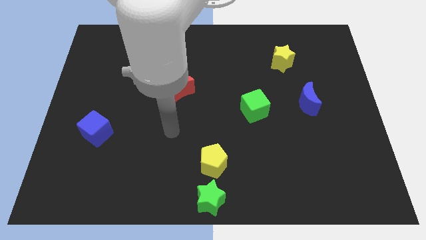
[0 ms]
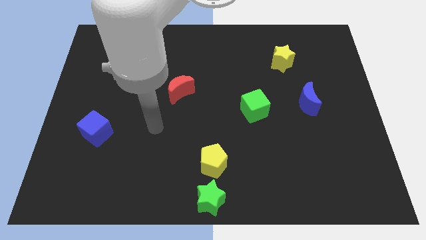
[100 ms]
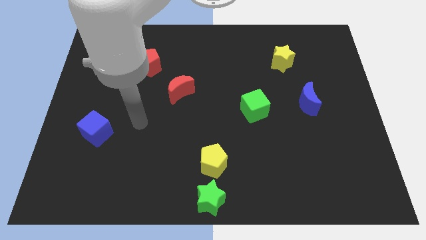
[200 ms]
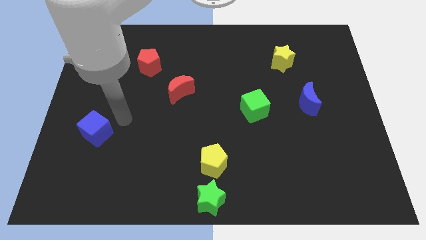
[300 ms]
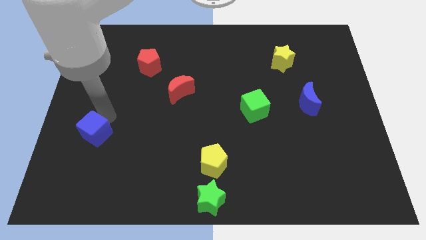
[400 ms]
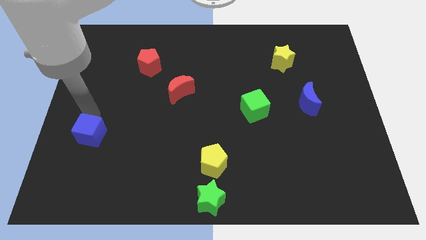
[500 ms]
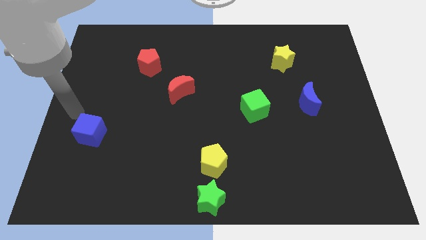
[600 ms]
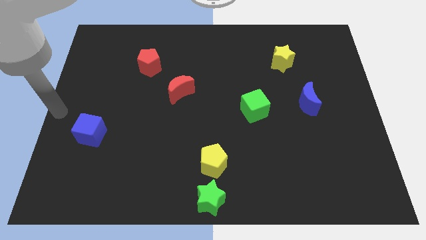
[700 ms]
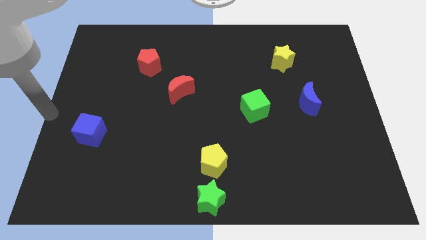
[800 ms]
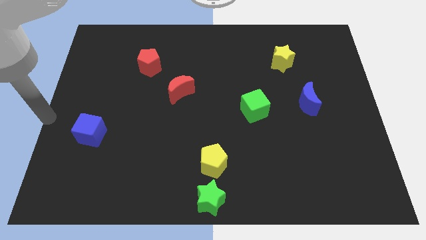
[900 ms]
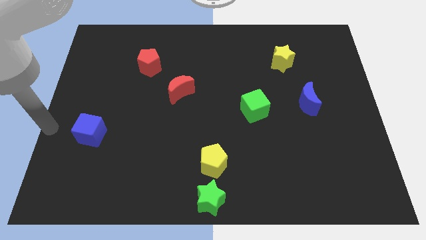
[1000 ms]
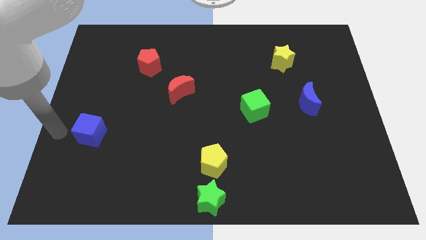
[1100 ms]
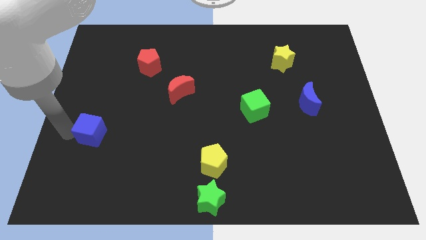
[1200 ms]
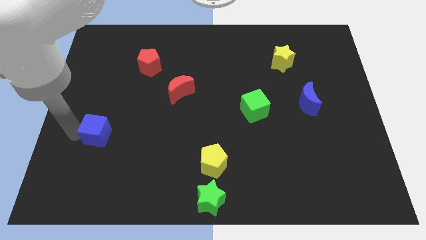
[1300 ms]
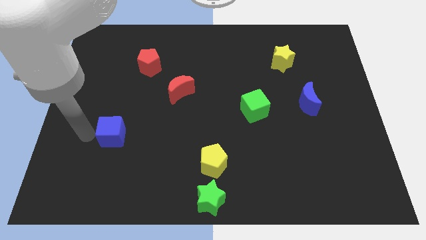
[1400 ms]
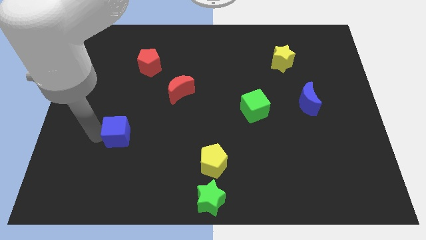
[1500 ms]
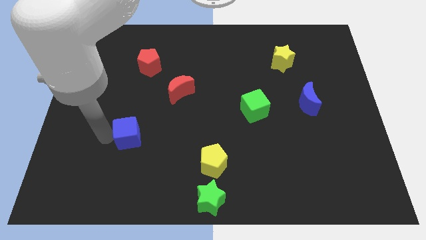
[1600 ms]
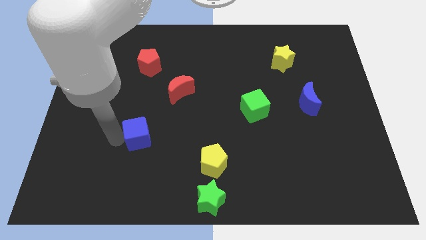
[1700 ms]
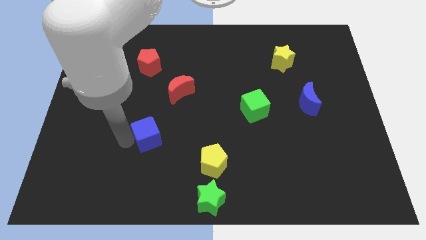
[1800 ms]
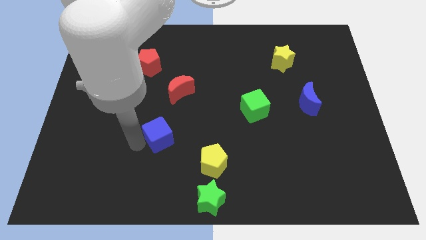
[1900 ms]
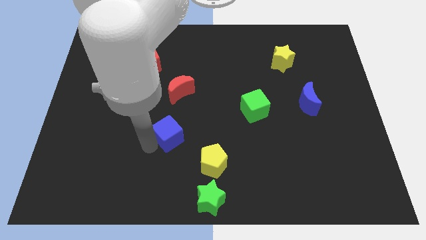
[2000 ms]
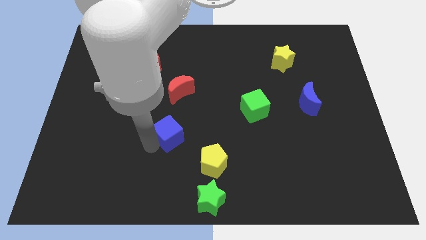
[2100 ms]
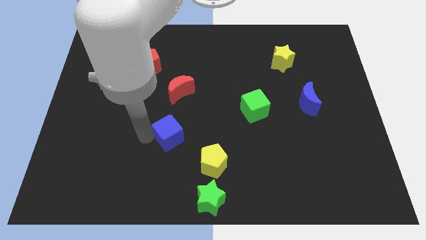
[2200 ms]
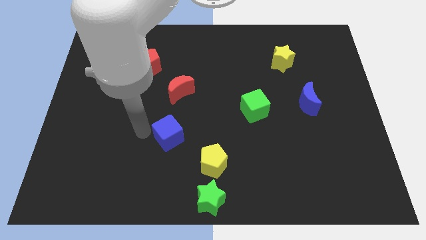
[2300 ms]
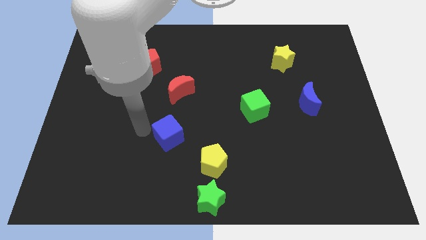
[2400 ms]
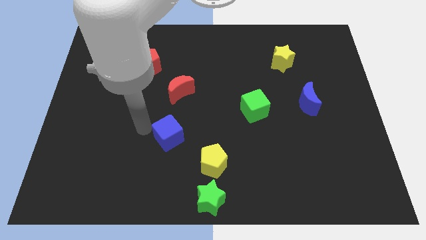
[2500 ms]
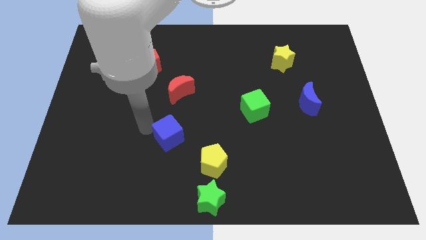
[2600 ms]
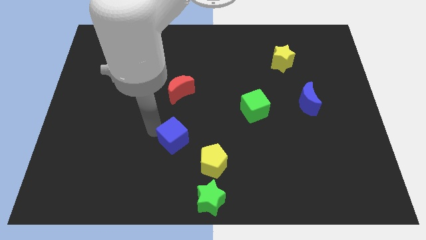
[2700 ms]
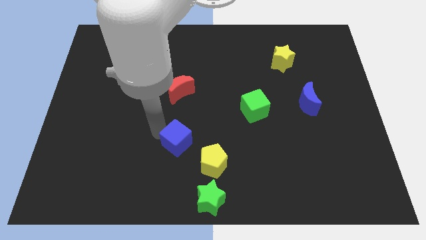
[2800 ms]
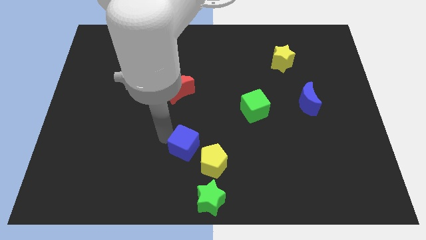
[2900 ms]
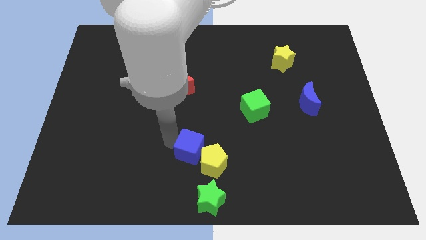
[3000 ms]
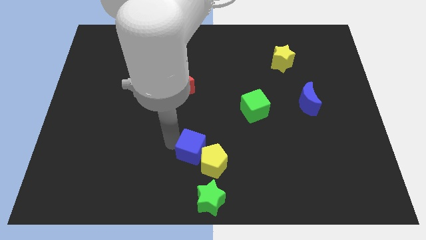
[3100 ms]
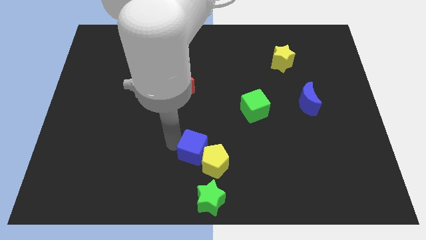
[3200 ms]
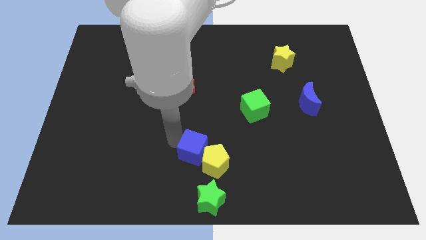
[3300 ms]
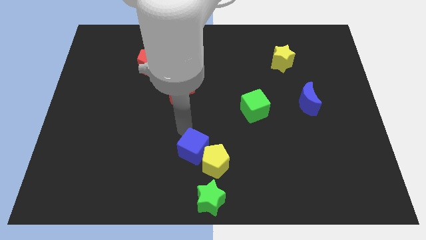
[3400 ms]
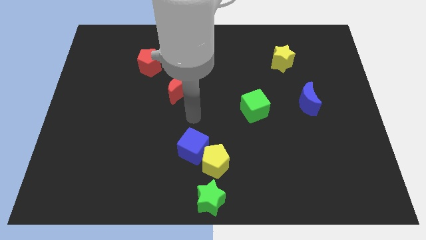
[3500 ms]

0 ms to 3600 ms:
move the blue cube diagonally above the yellow pentagon

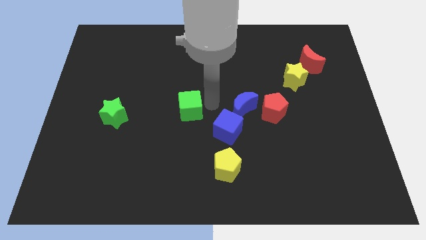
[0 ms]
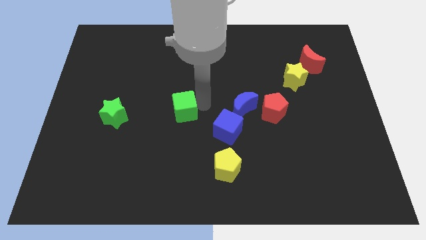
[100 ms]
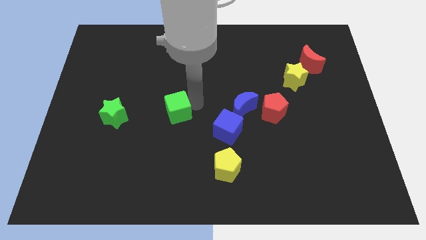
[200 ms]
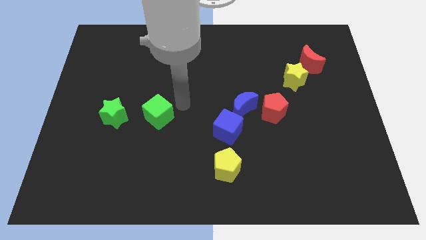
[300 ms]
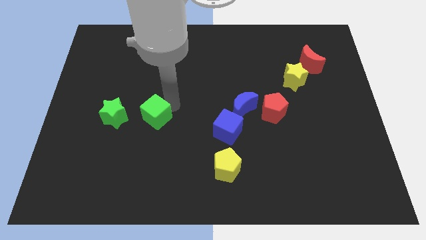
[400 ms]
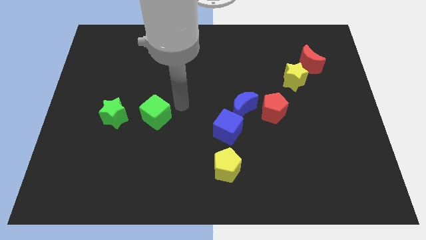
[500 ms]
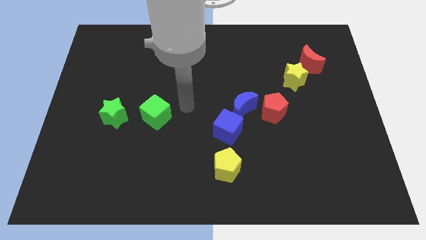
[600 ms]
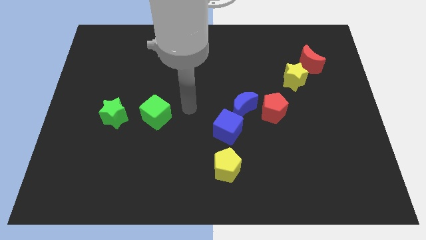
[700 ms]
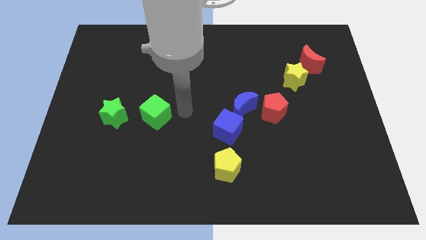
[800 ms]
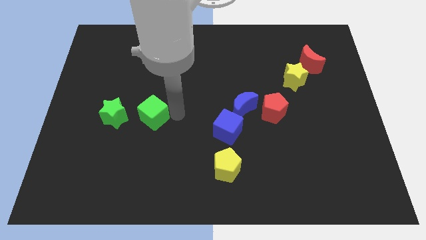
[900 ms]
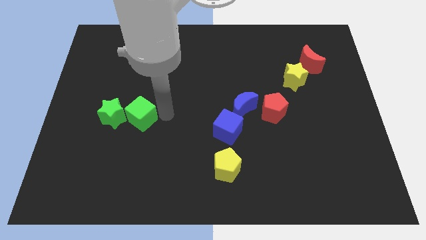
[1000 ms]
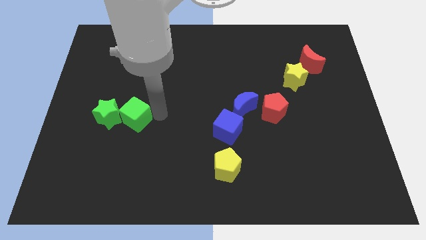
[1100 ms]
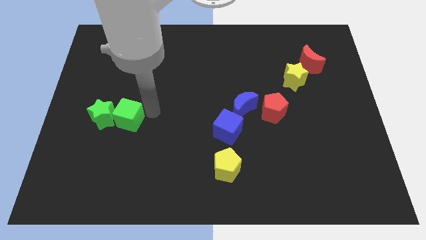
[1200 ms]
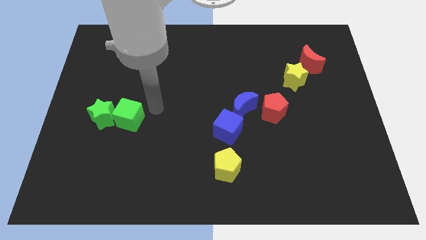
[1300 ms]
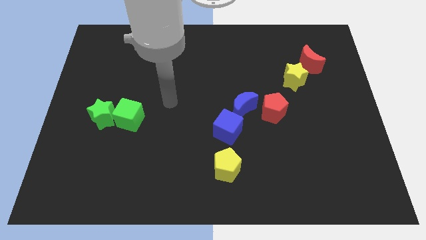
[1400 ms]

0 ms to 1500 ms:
push the green cube into green star

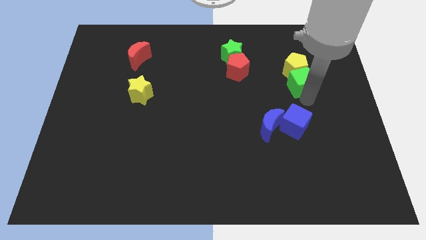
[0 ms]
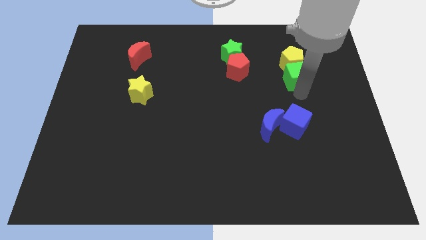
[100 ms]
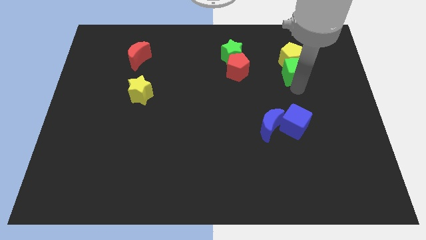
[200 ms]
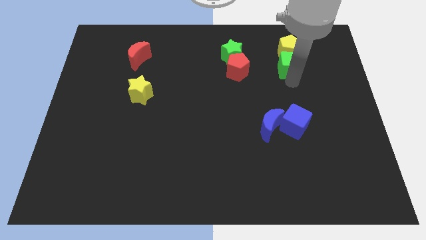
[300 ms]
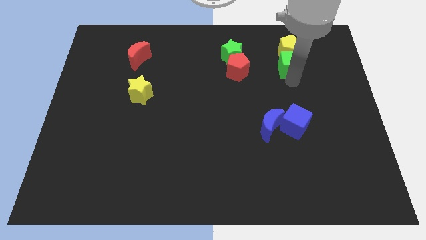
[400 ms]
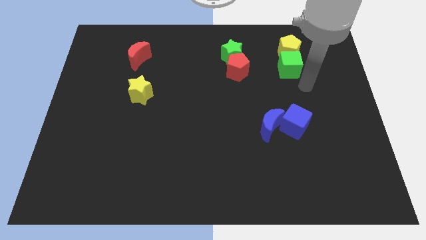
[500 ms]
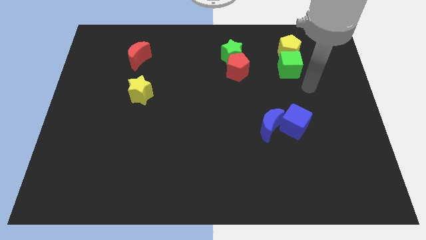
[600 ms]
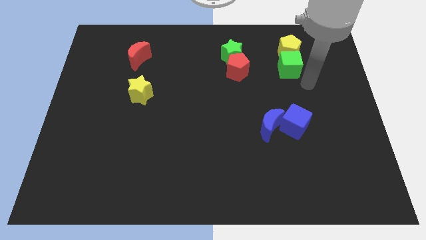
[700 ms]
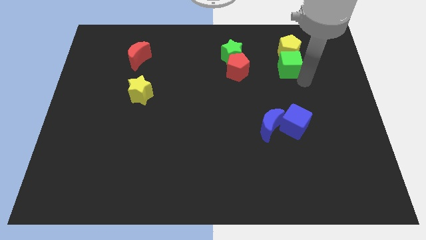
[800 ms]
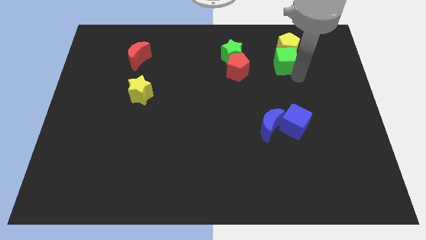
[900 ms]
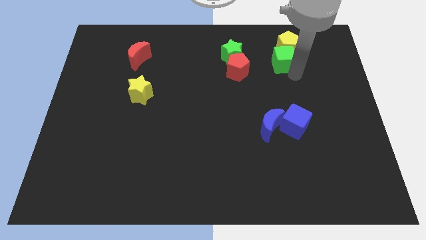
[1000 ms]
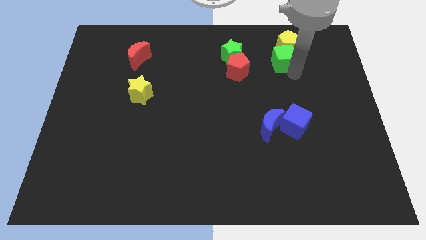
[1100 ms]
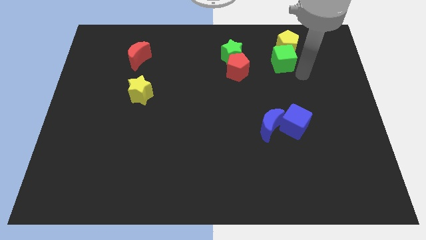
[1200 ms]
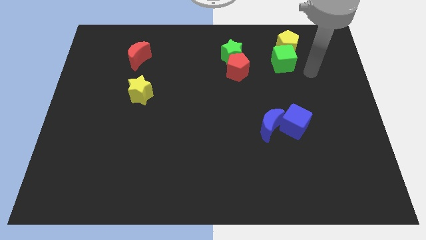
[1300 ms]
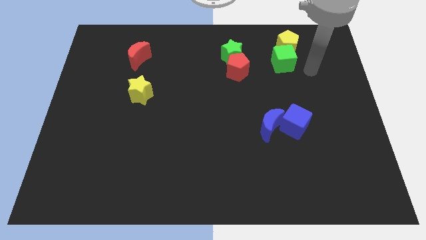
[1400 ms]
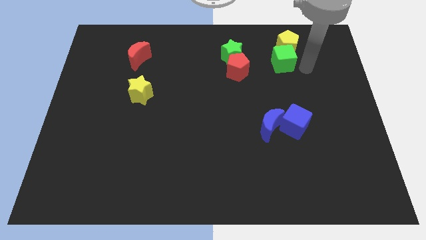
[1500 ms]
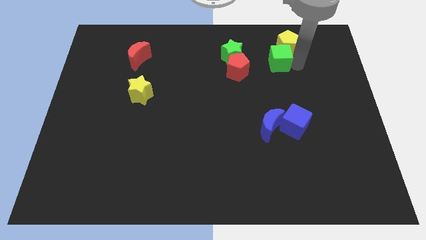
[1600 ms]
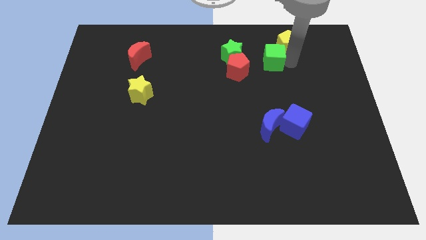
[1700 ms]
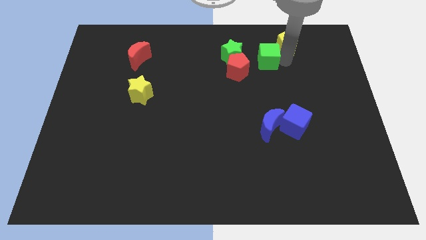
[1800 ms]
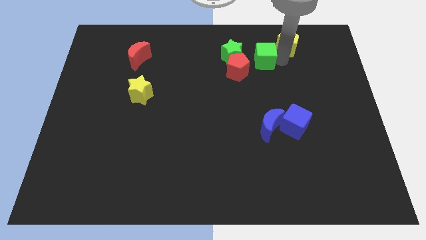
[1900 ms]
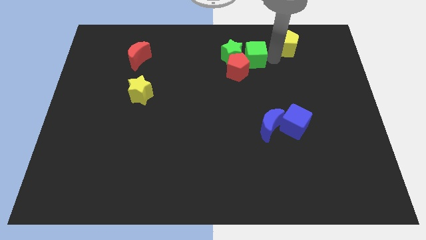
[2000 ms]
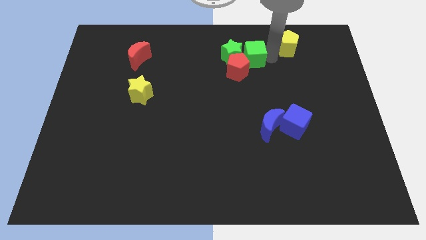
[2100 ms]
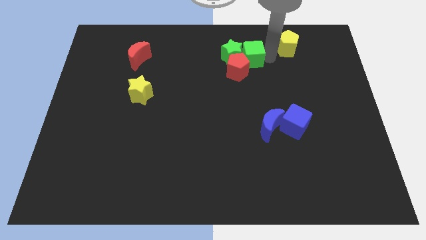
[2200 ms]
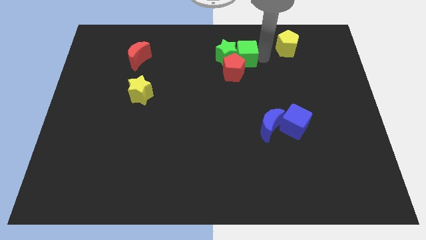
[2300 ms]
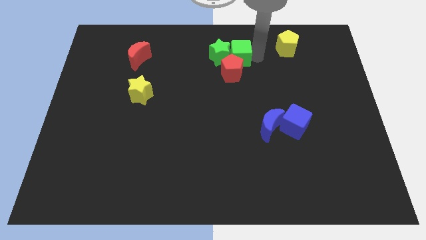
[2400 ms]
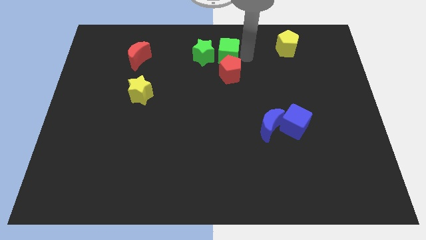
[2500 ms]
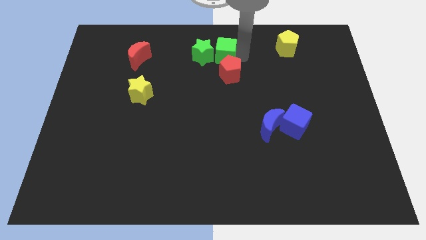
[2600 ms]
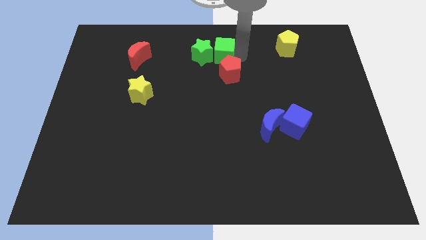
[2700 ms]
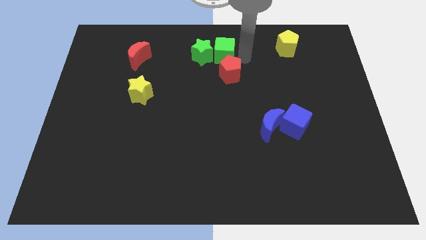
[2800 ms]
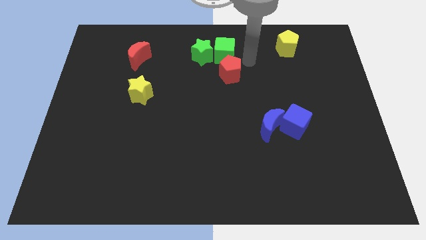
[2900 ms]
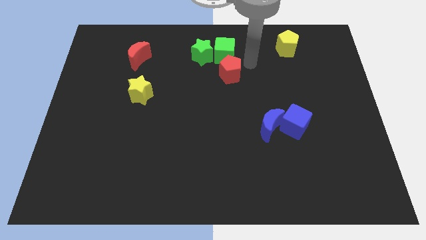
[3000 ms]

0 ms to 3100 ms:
separate green cube from yellow pentagon

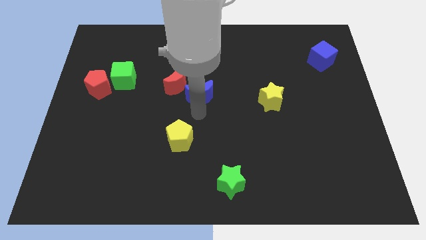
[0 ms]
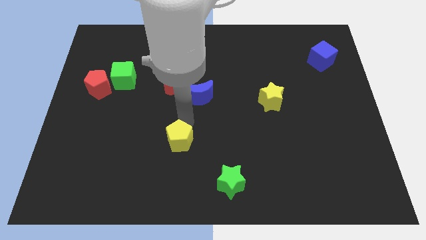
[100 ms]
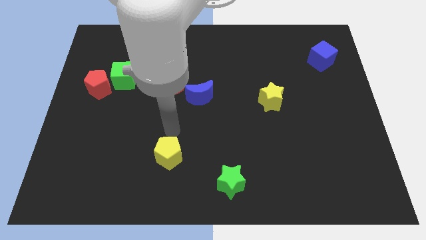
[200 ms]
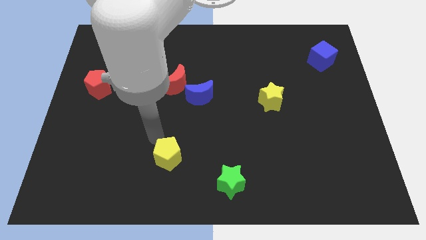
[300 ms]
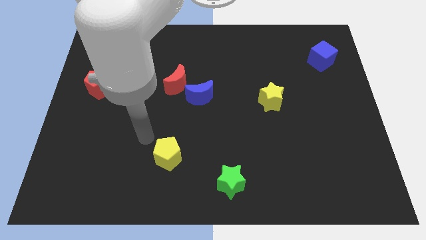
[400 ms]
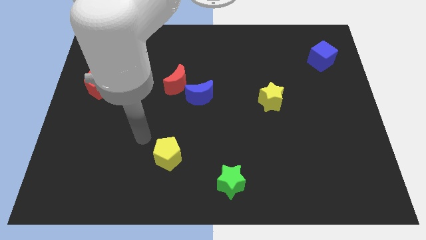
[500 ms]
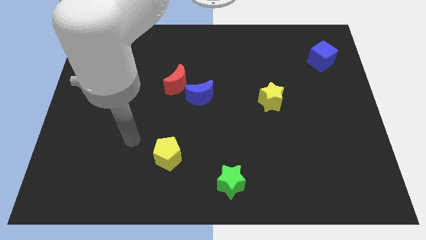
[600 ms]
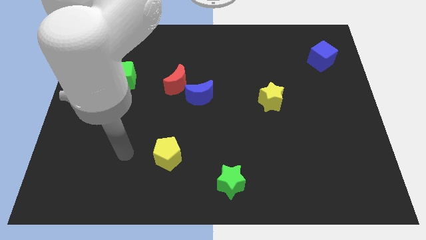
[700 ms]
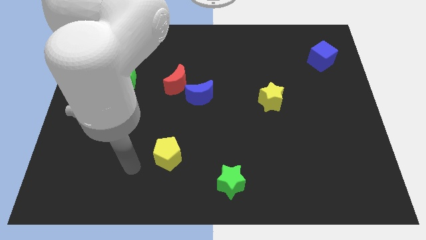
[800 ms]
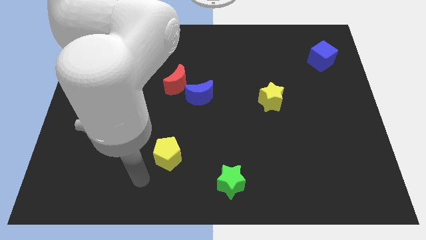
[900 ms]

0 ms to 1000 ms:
slide the yellow pentagon down slightly
